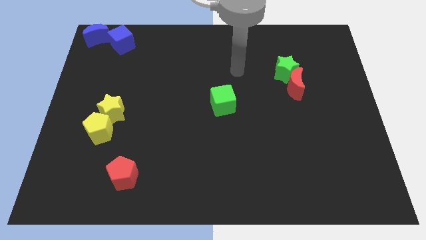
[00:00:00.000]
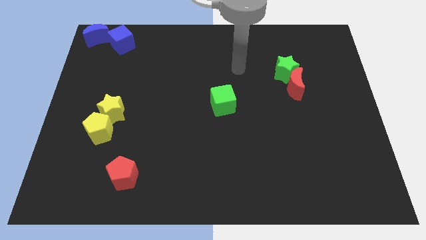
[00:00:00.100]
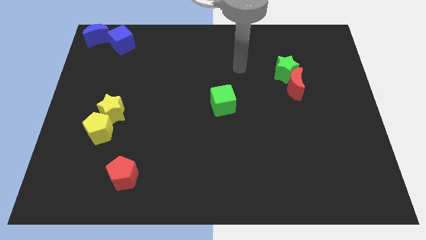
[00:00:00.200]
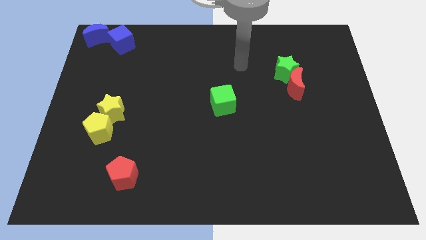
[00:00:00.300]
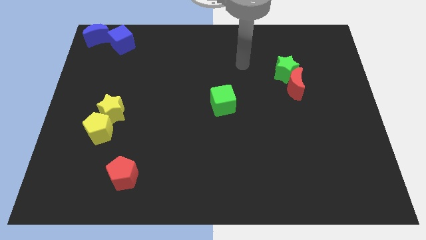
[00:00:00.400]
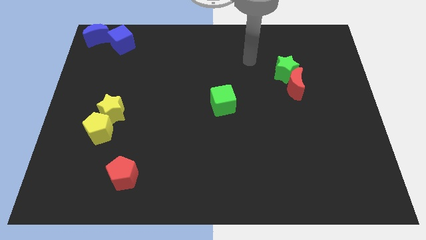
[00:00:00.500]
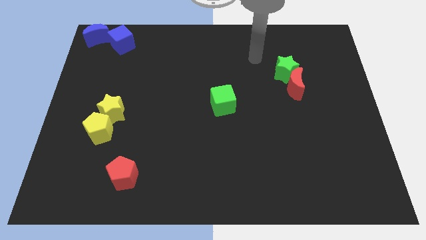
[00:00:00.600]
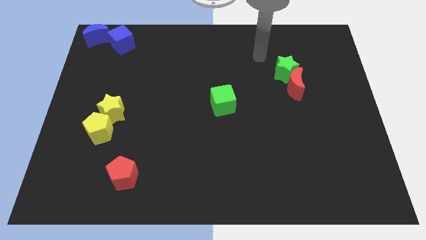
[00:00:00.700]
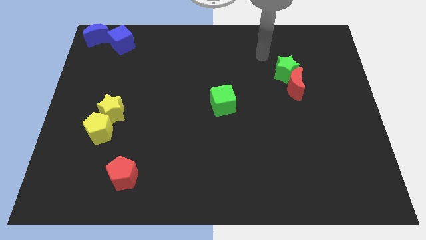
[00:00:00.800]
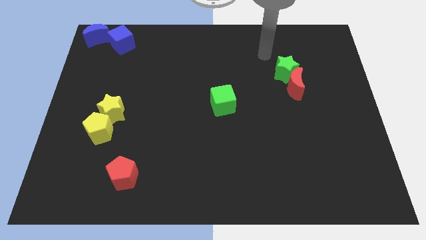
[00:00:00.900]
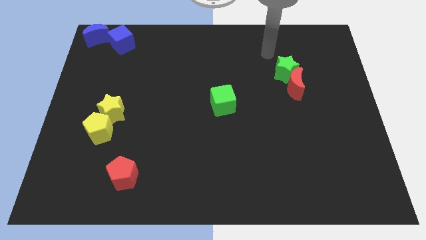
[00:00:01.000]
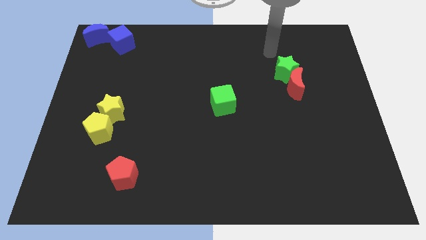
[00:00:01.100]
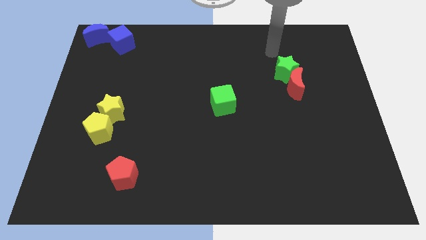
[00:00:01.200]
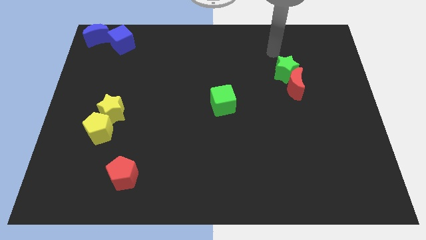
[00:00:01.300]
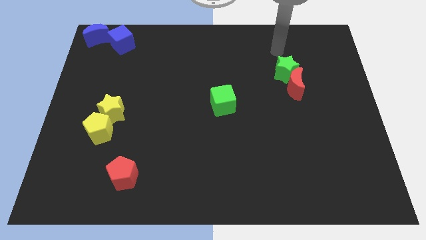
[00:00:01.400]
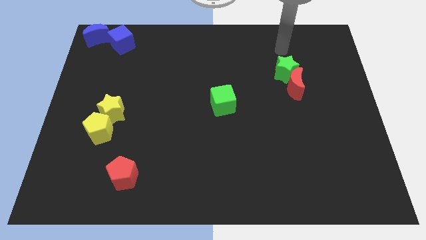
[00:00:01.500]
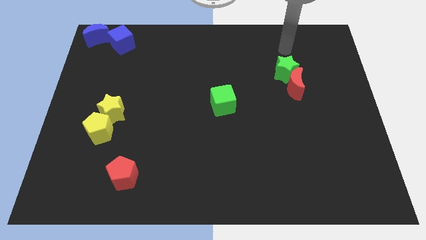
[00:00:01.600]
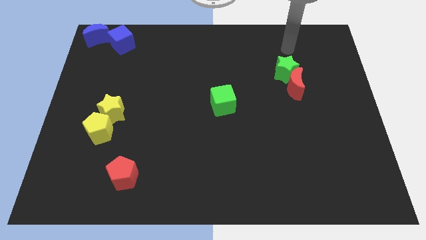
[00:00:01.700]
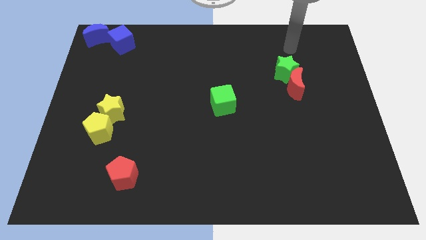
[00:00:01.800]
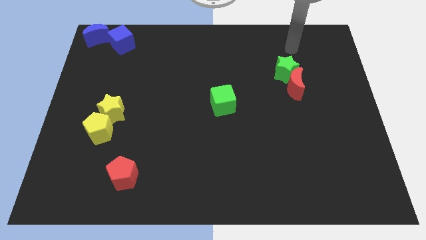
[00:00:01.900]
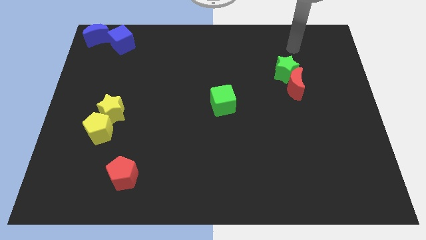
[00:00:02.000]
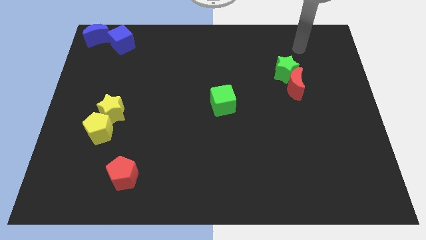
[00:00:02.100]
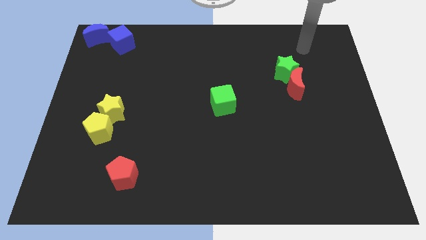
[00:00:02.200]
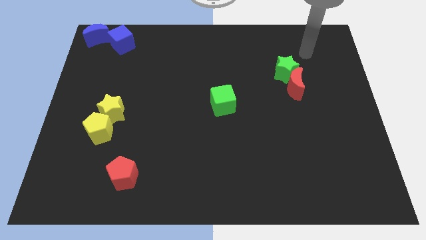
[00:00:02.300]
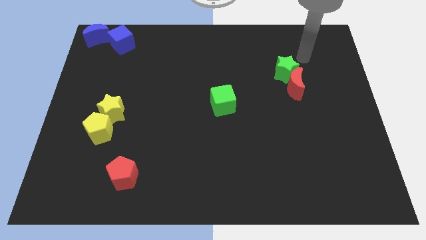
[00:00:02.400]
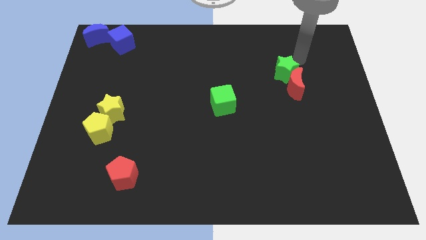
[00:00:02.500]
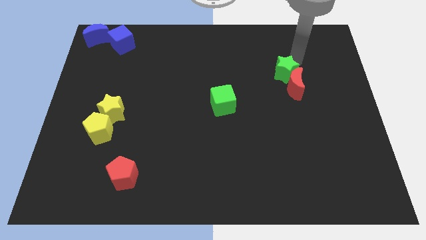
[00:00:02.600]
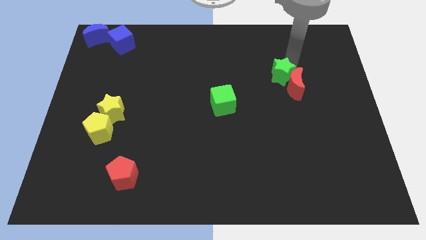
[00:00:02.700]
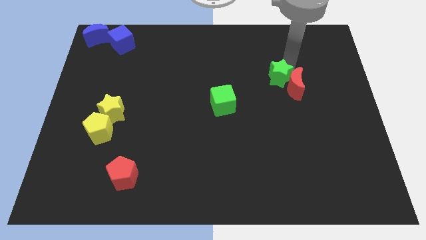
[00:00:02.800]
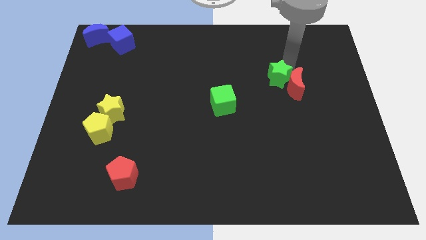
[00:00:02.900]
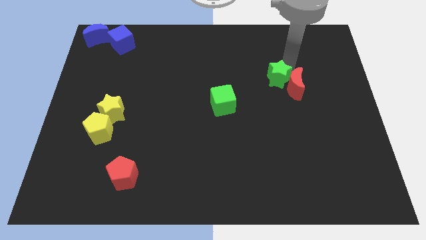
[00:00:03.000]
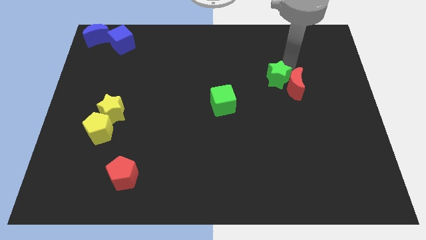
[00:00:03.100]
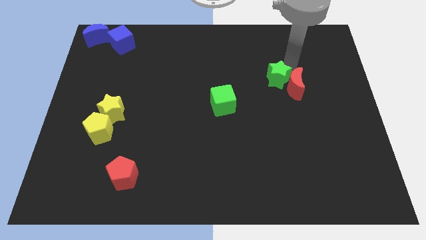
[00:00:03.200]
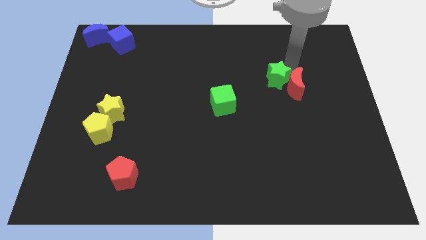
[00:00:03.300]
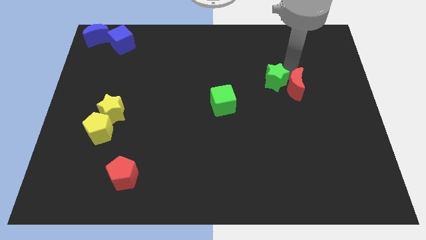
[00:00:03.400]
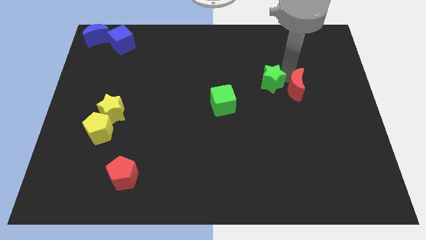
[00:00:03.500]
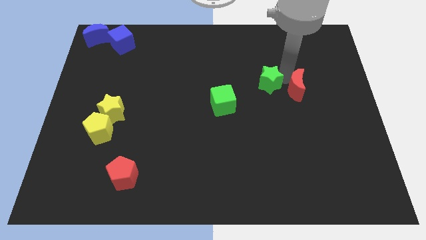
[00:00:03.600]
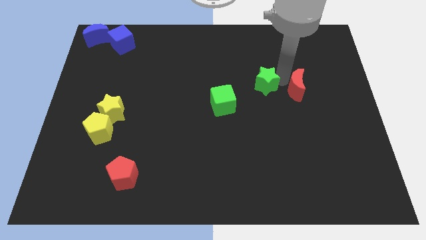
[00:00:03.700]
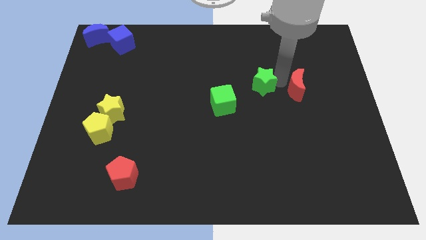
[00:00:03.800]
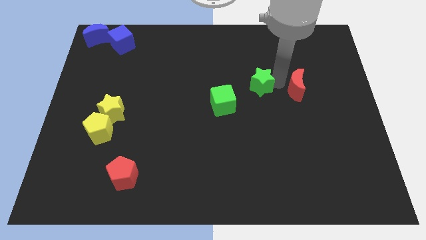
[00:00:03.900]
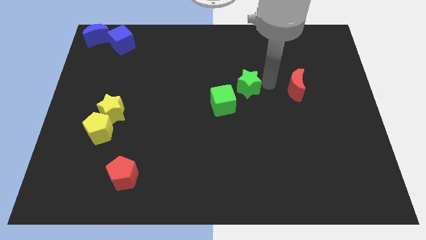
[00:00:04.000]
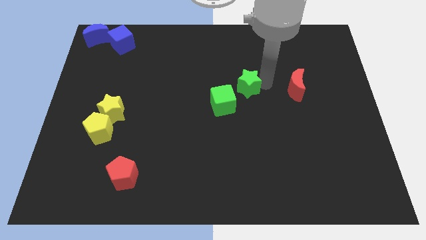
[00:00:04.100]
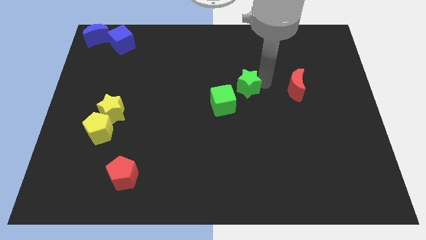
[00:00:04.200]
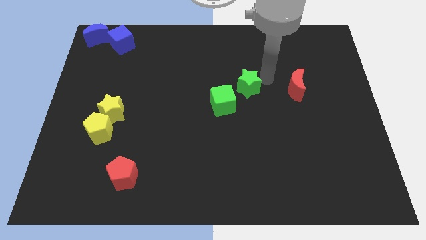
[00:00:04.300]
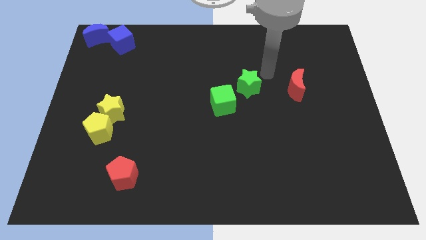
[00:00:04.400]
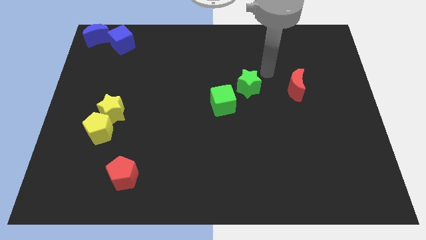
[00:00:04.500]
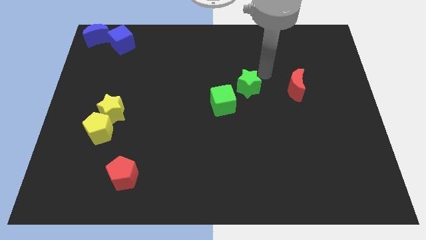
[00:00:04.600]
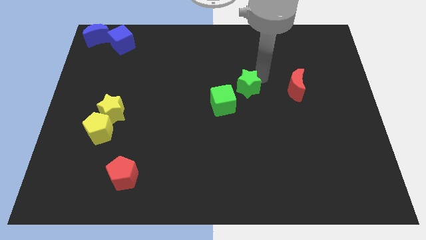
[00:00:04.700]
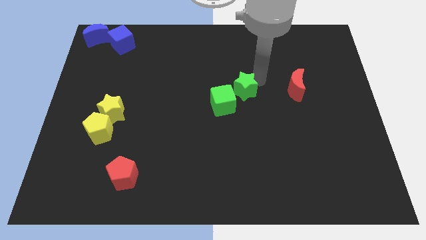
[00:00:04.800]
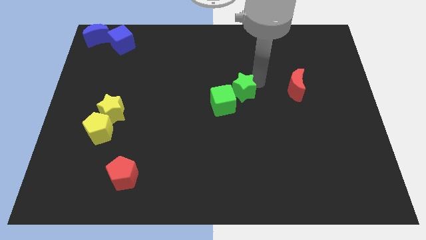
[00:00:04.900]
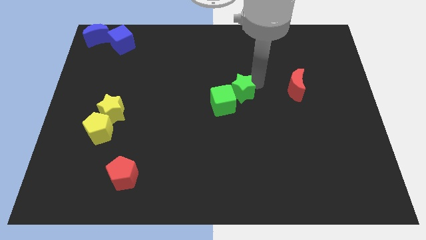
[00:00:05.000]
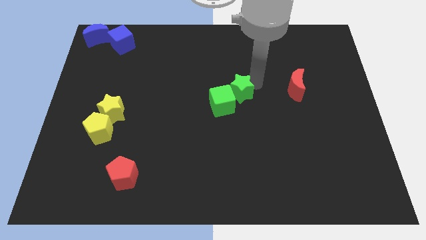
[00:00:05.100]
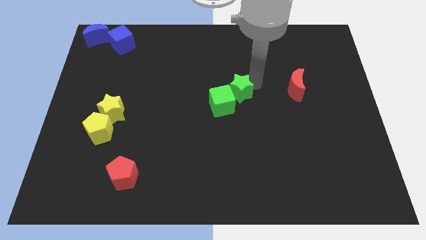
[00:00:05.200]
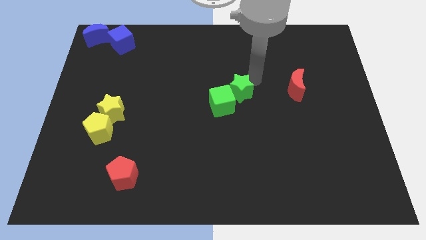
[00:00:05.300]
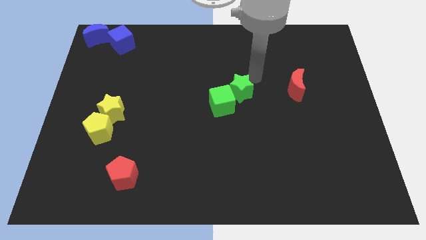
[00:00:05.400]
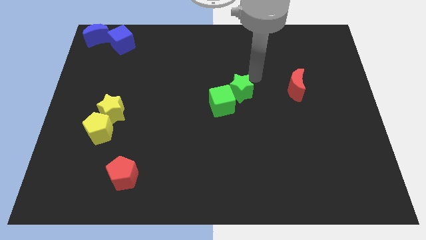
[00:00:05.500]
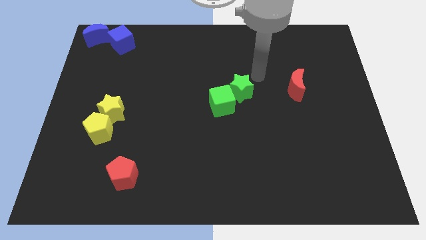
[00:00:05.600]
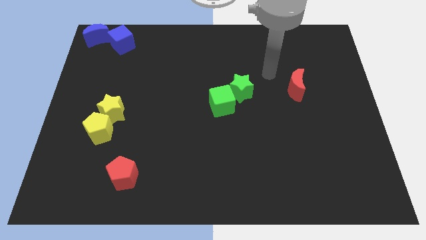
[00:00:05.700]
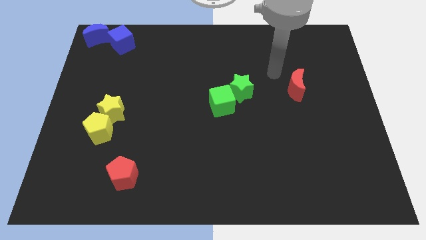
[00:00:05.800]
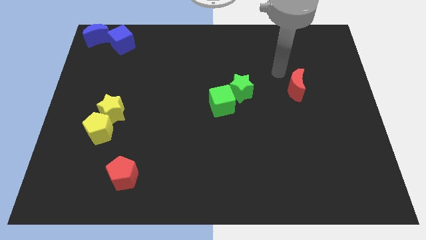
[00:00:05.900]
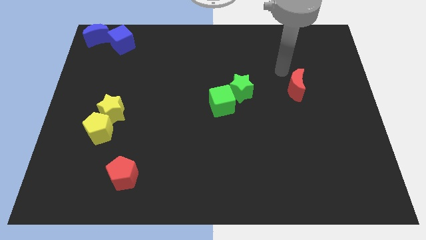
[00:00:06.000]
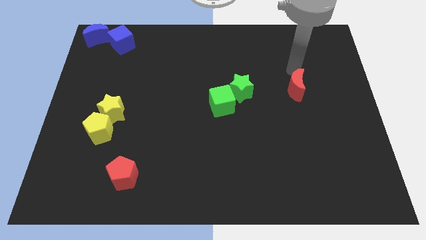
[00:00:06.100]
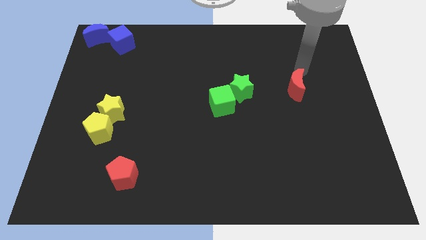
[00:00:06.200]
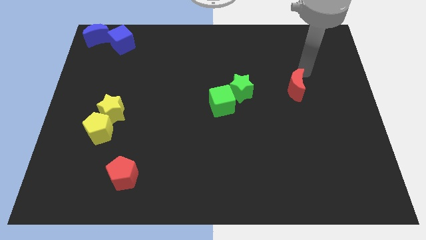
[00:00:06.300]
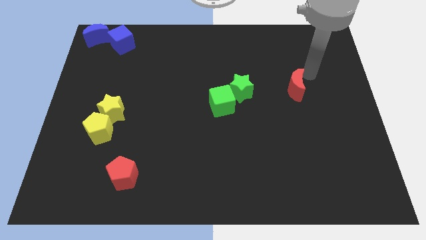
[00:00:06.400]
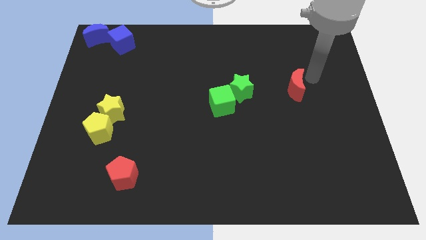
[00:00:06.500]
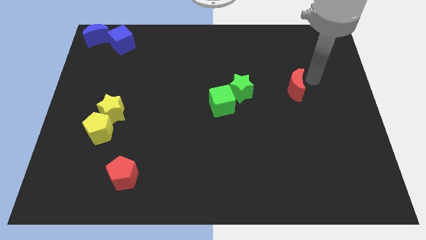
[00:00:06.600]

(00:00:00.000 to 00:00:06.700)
push the green star into the green cube

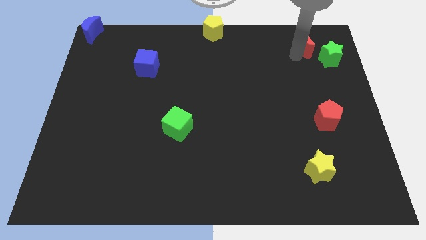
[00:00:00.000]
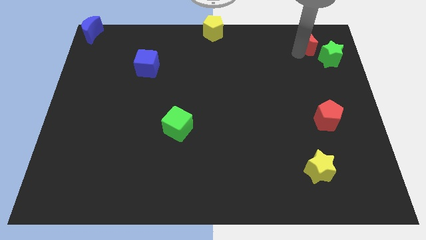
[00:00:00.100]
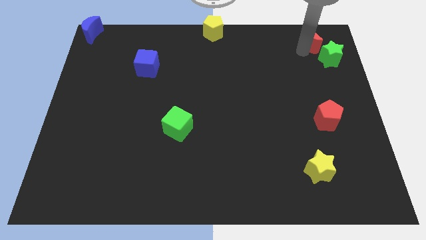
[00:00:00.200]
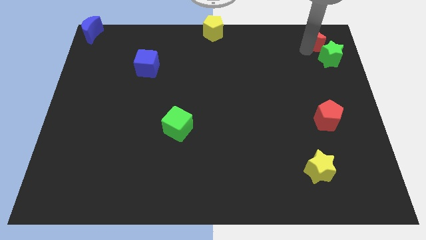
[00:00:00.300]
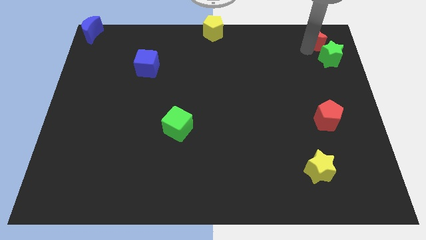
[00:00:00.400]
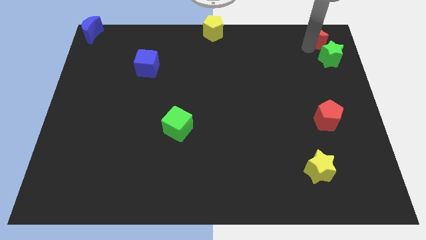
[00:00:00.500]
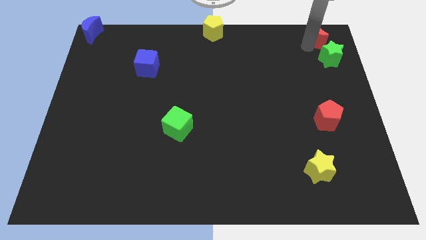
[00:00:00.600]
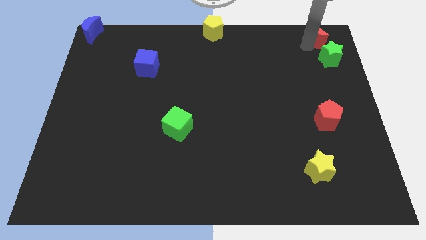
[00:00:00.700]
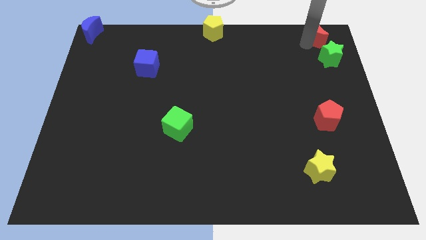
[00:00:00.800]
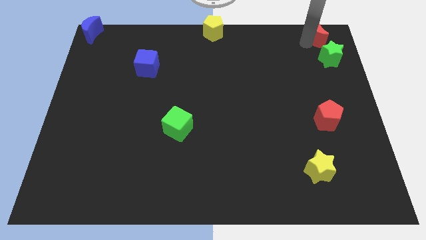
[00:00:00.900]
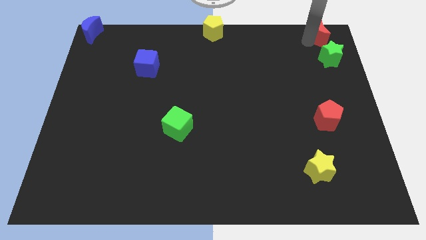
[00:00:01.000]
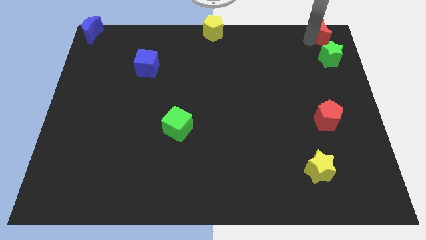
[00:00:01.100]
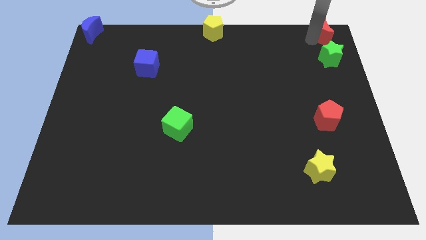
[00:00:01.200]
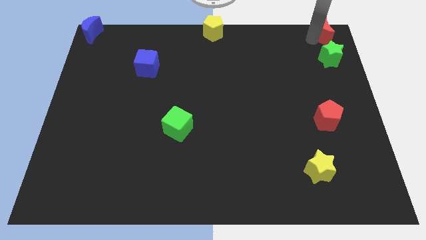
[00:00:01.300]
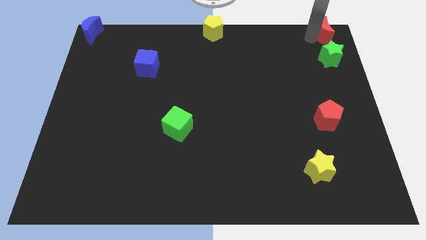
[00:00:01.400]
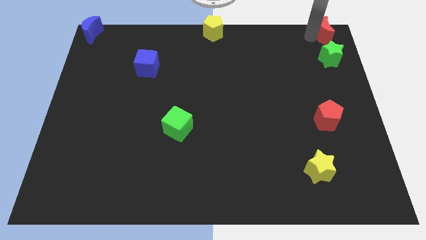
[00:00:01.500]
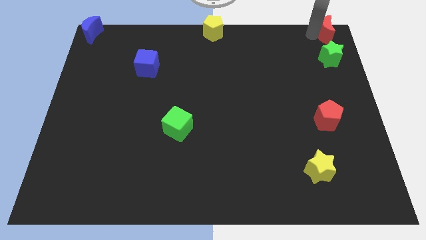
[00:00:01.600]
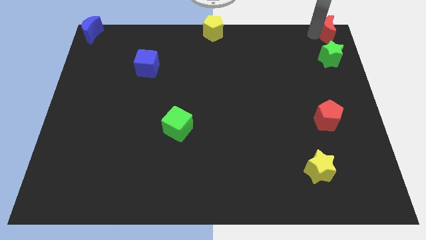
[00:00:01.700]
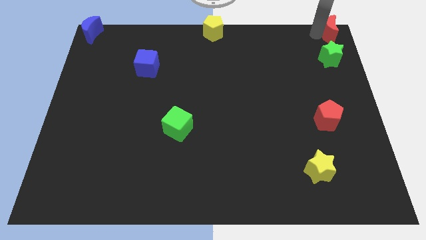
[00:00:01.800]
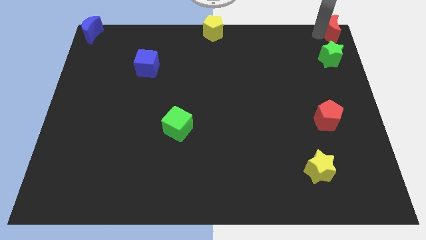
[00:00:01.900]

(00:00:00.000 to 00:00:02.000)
move the red moon to the top side of the green star

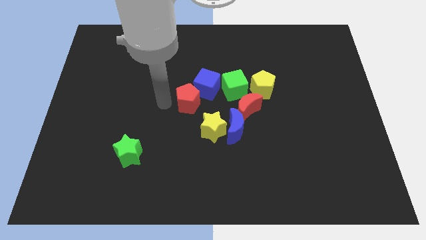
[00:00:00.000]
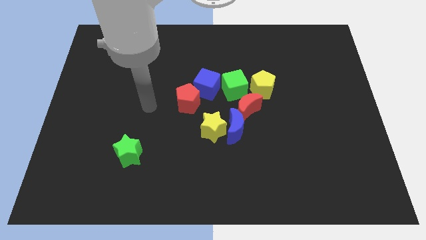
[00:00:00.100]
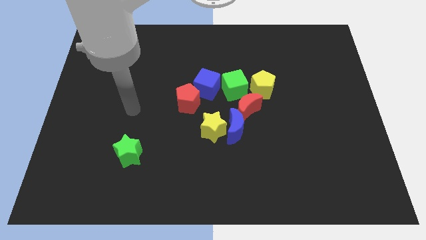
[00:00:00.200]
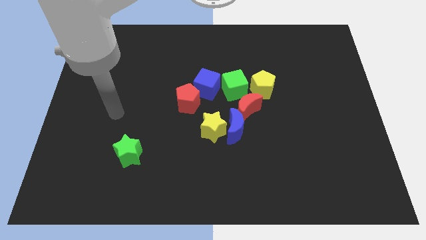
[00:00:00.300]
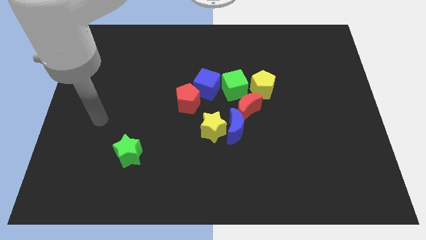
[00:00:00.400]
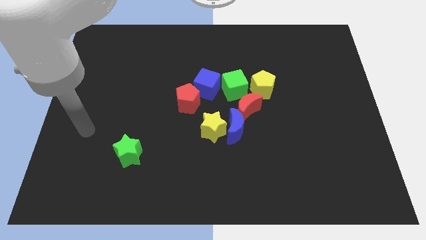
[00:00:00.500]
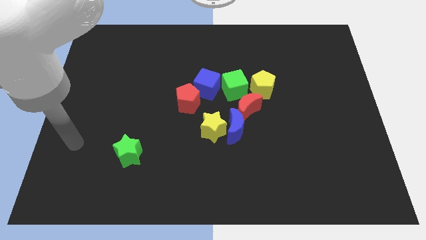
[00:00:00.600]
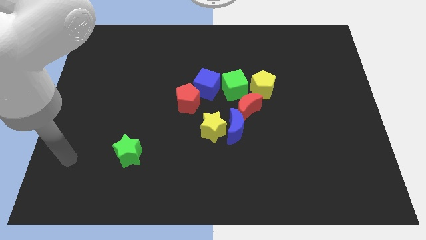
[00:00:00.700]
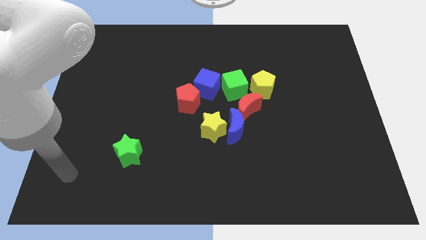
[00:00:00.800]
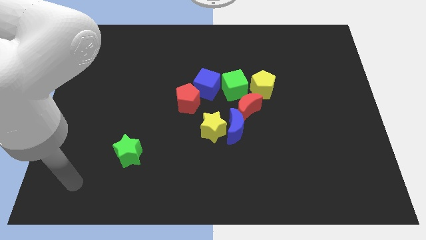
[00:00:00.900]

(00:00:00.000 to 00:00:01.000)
move your hand away from the red pentagon
